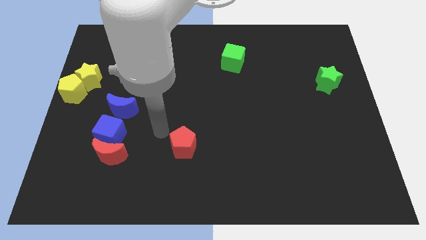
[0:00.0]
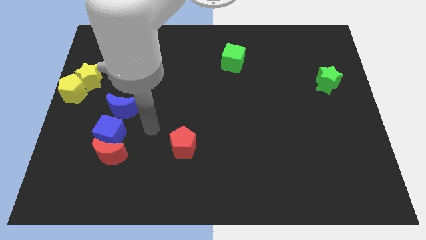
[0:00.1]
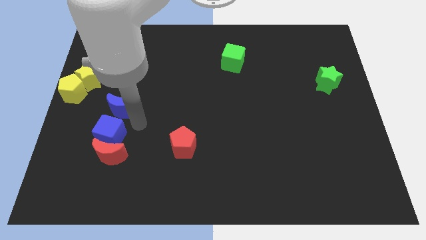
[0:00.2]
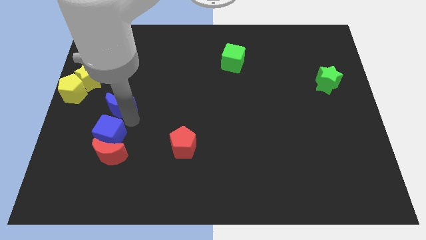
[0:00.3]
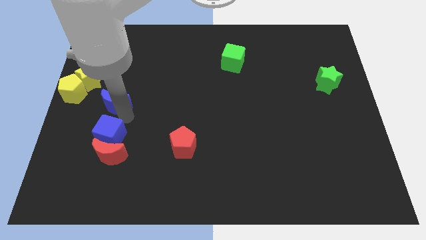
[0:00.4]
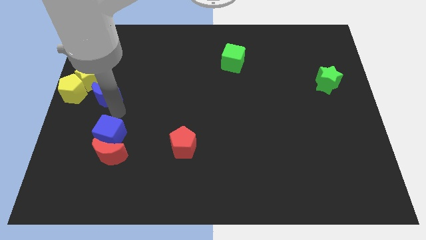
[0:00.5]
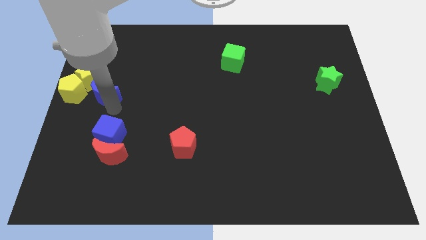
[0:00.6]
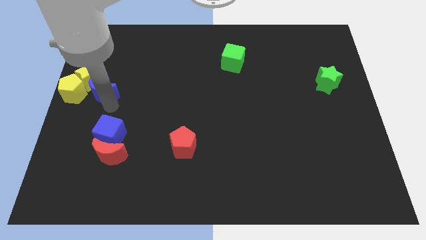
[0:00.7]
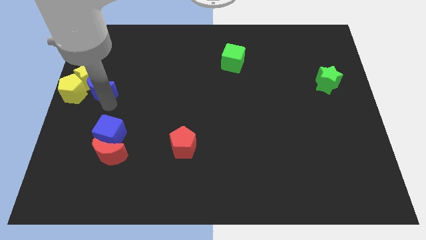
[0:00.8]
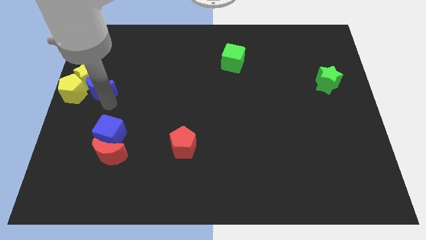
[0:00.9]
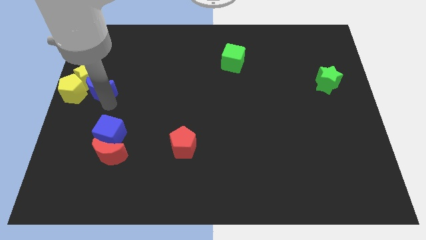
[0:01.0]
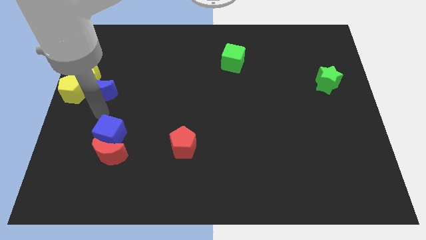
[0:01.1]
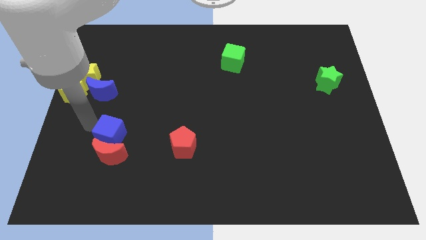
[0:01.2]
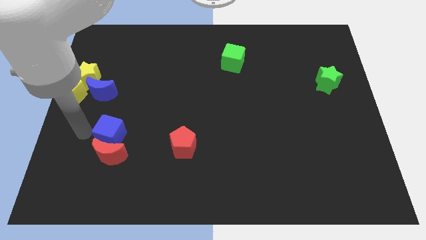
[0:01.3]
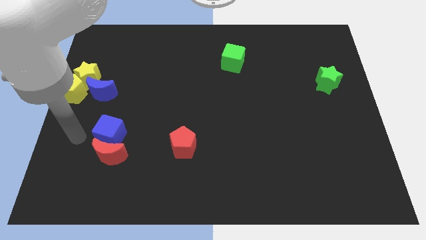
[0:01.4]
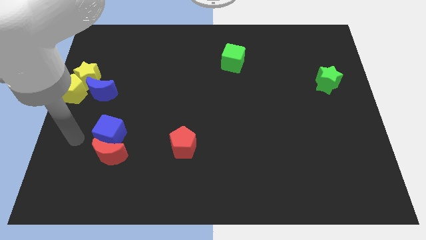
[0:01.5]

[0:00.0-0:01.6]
separate blue crescent from blue cube

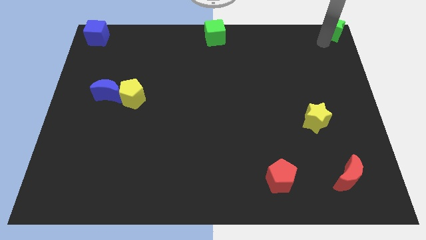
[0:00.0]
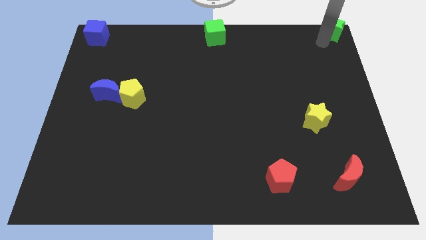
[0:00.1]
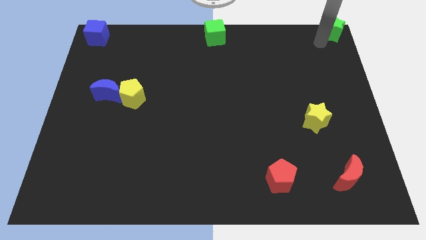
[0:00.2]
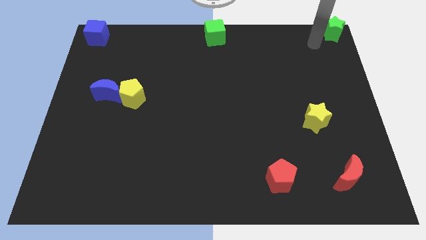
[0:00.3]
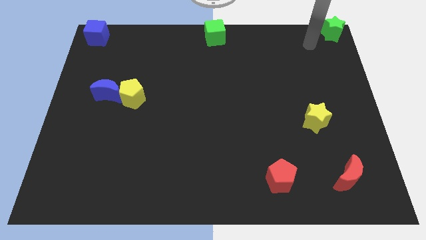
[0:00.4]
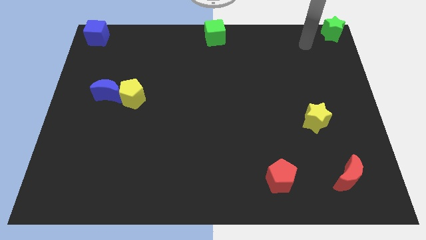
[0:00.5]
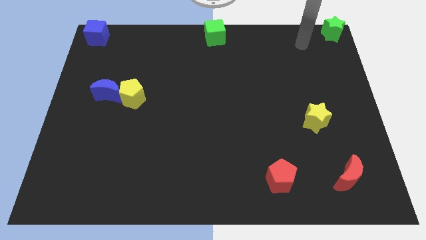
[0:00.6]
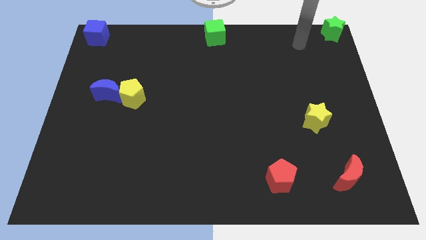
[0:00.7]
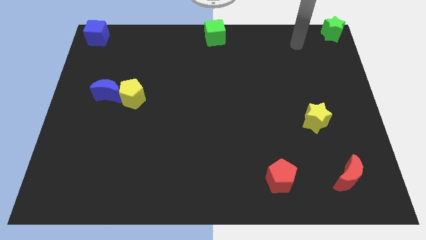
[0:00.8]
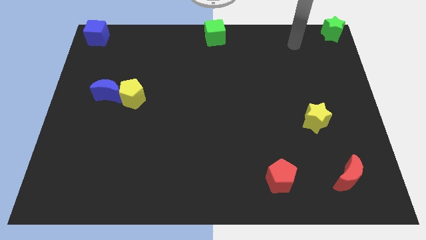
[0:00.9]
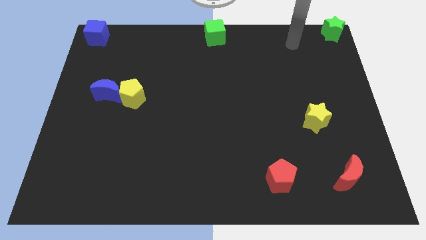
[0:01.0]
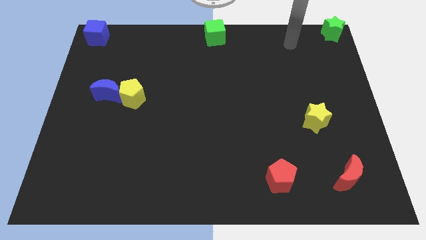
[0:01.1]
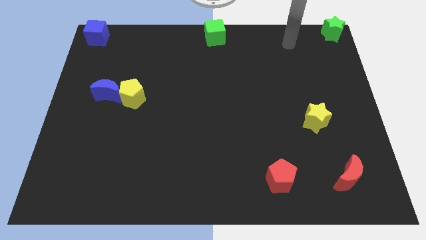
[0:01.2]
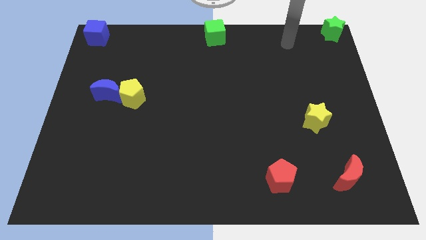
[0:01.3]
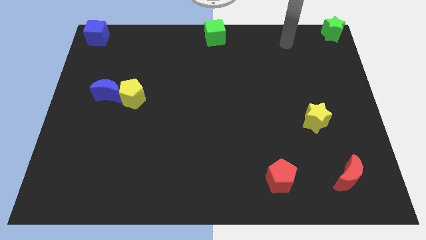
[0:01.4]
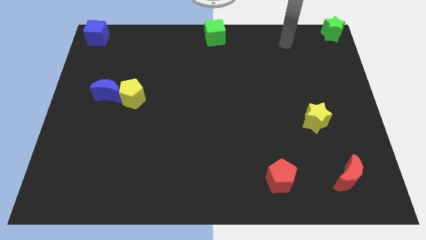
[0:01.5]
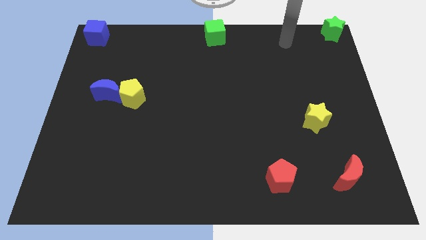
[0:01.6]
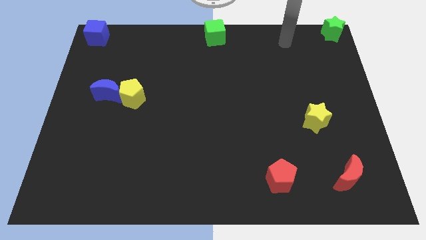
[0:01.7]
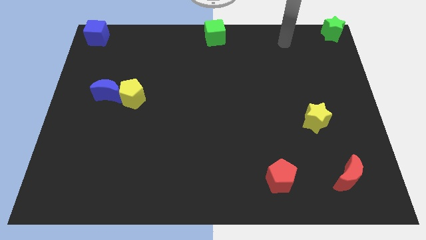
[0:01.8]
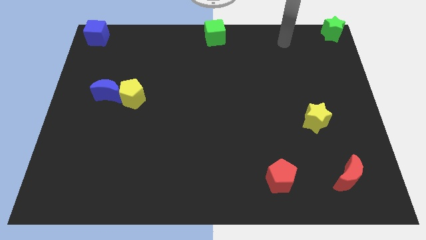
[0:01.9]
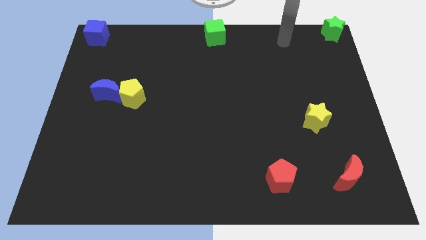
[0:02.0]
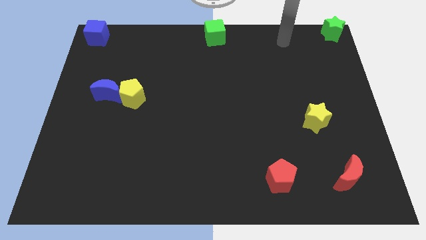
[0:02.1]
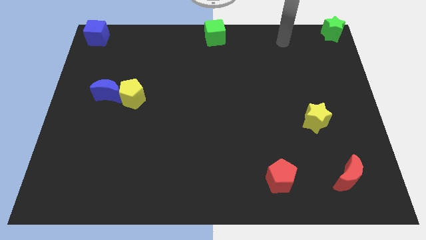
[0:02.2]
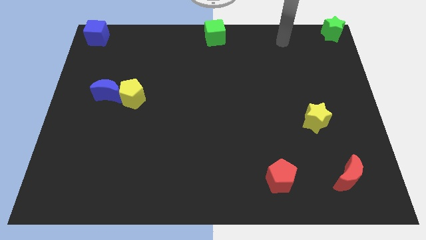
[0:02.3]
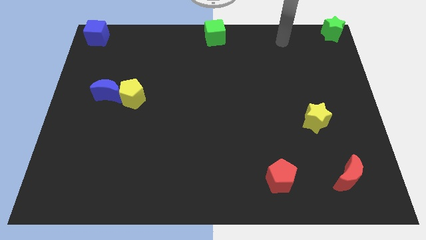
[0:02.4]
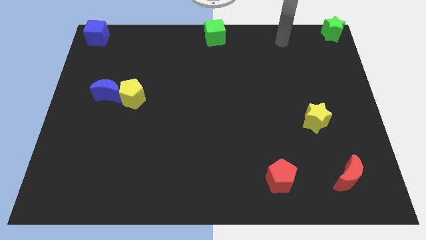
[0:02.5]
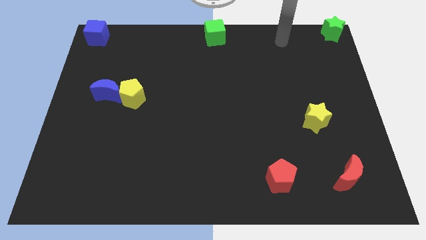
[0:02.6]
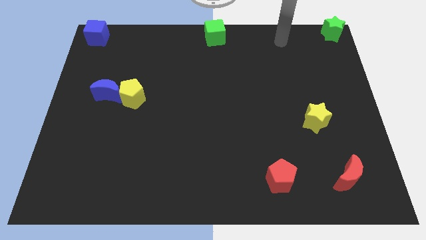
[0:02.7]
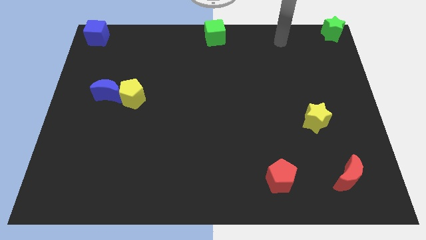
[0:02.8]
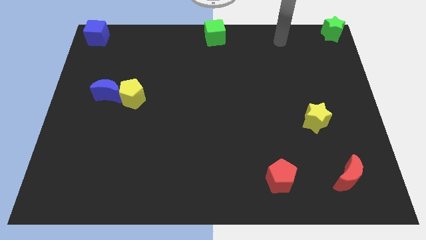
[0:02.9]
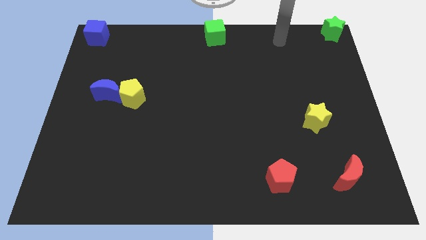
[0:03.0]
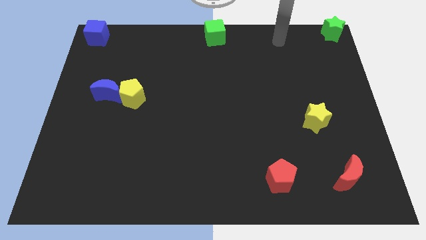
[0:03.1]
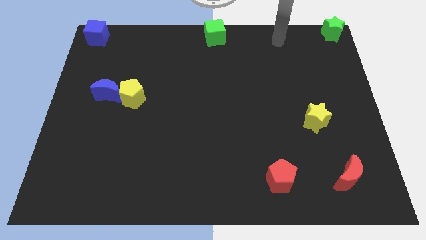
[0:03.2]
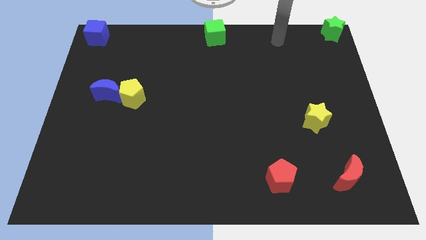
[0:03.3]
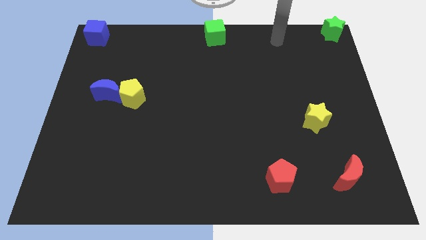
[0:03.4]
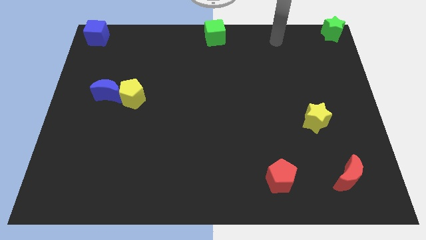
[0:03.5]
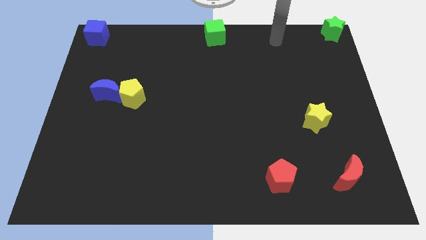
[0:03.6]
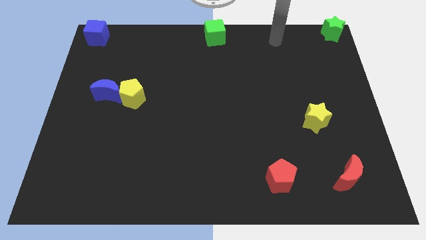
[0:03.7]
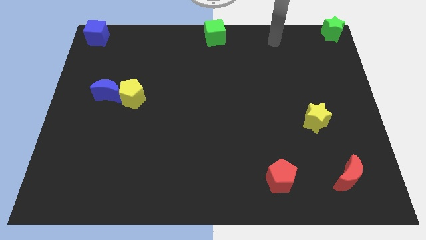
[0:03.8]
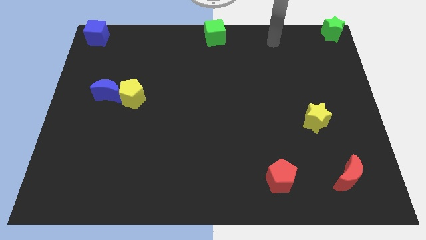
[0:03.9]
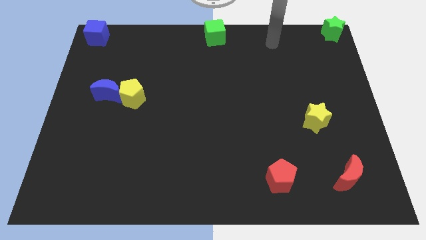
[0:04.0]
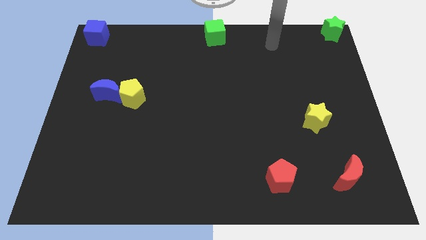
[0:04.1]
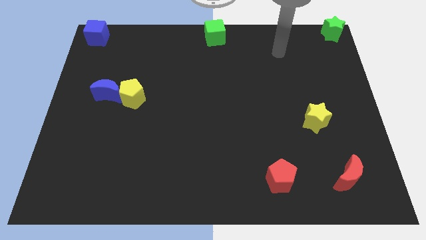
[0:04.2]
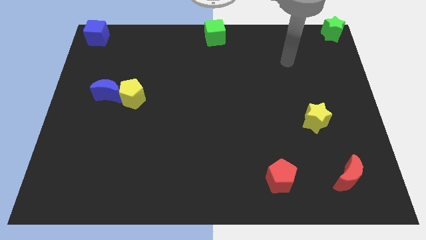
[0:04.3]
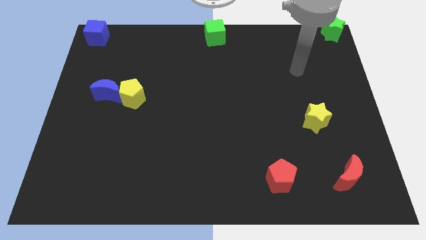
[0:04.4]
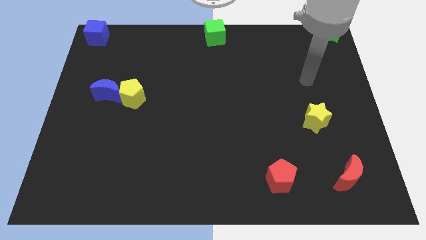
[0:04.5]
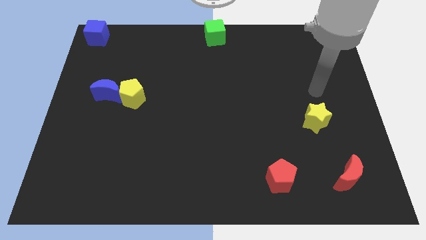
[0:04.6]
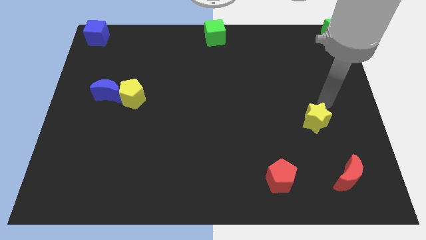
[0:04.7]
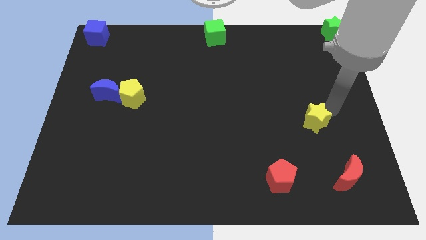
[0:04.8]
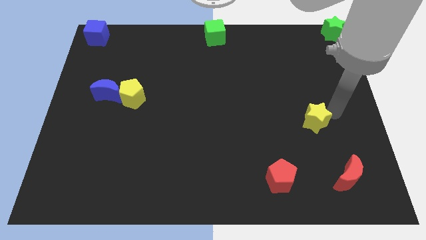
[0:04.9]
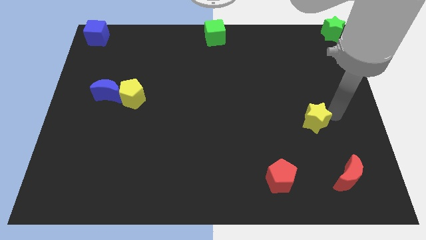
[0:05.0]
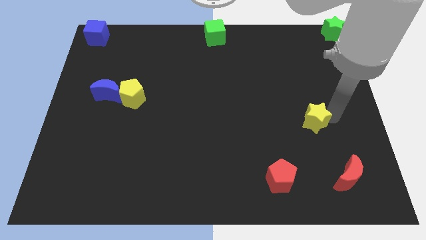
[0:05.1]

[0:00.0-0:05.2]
move your arm near the yellow star

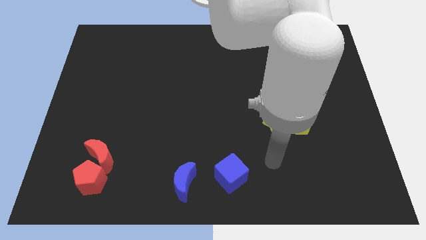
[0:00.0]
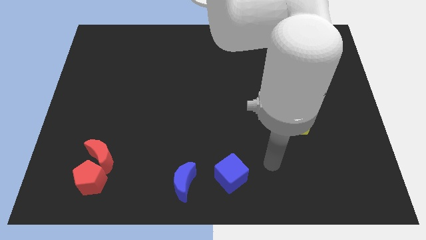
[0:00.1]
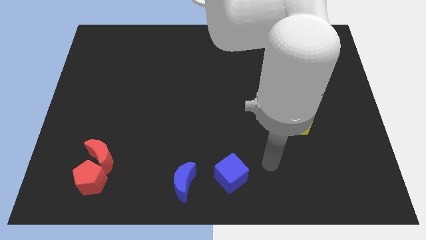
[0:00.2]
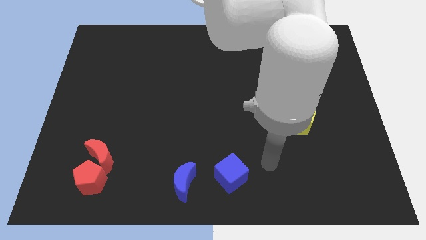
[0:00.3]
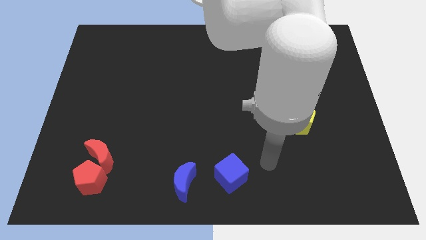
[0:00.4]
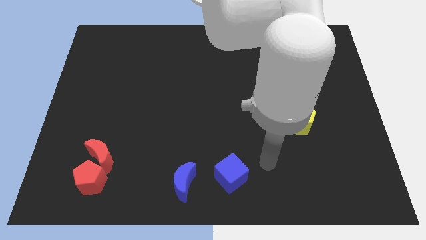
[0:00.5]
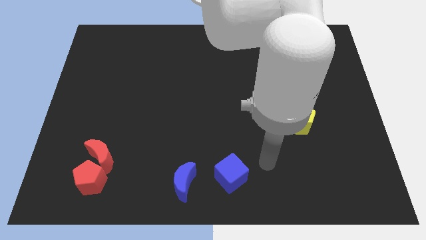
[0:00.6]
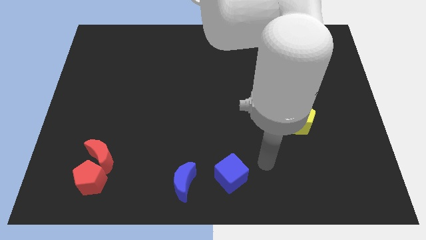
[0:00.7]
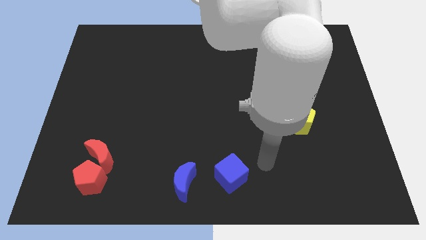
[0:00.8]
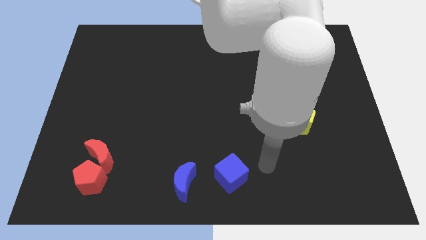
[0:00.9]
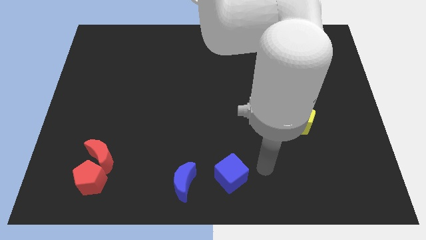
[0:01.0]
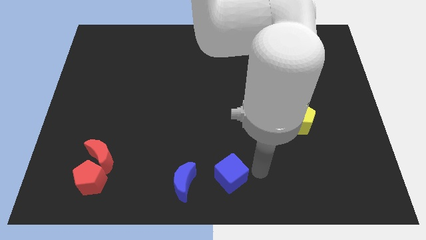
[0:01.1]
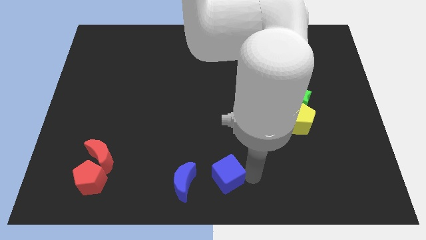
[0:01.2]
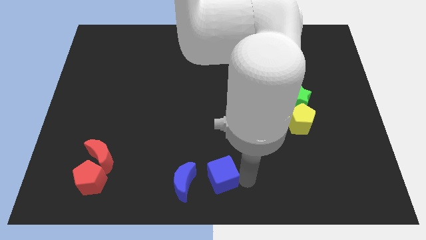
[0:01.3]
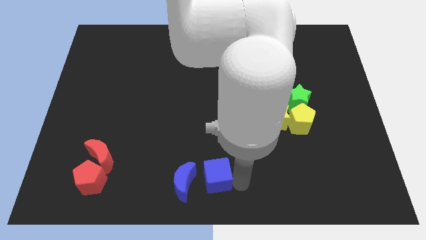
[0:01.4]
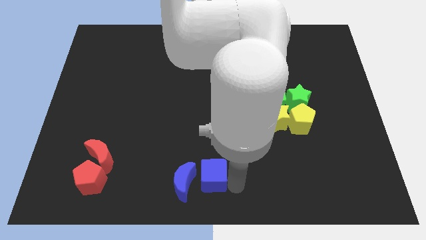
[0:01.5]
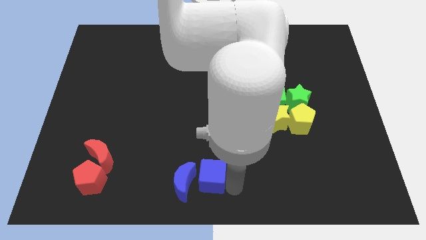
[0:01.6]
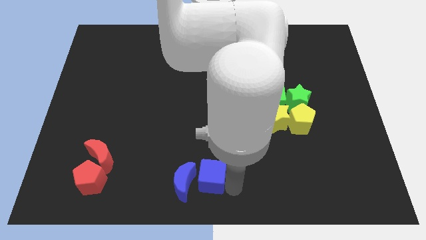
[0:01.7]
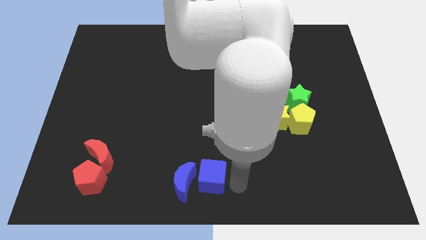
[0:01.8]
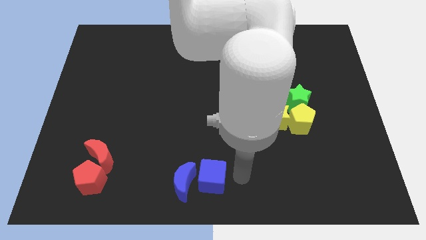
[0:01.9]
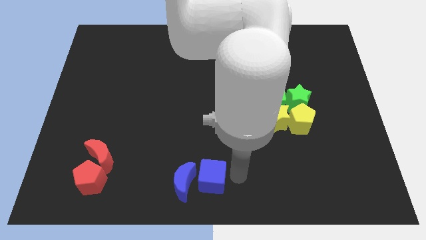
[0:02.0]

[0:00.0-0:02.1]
move blue cube middle of the board
